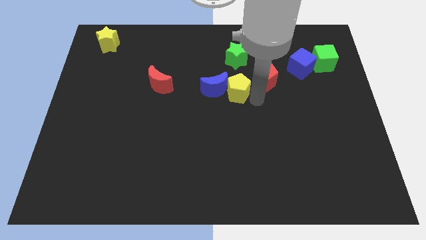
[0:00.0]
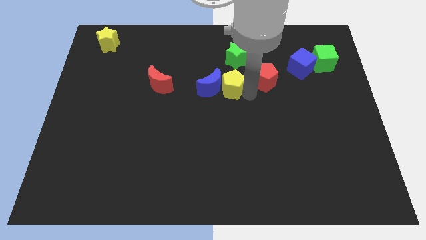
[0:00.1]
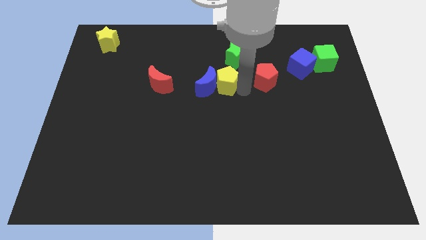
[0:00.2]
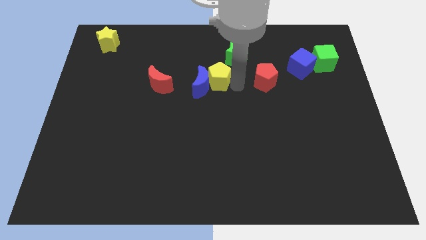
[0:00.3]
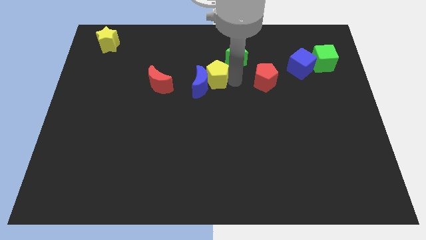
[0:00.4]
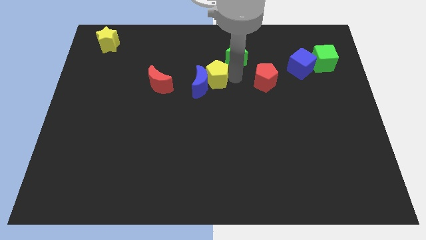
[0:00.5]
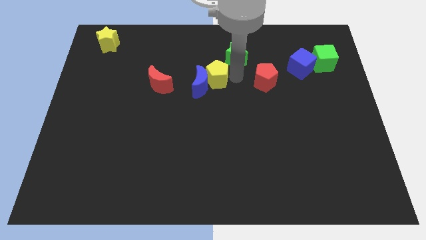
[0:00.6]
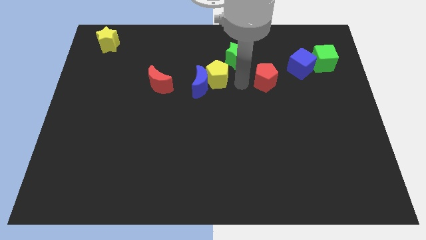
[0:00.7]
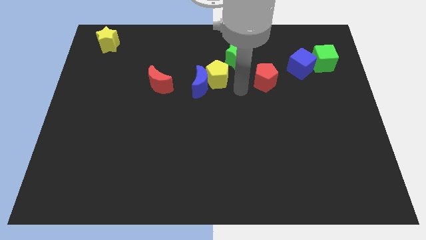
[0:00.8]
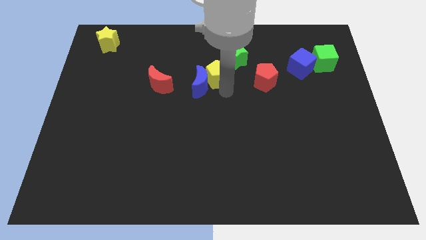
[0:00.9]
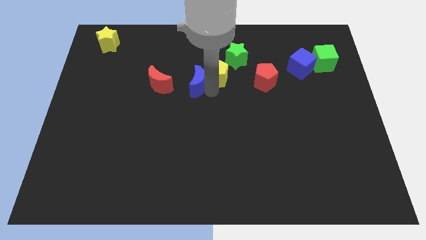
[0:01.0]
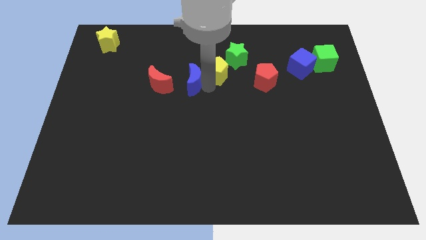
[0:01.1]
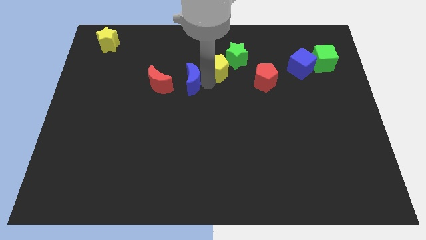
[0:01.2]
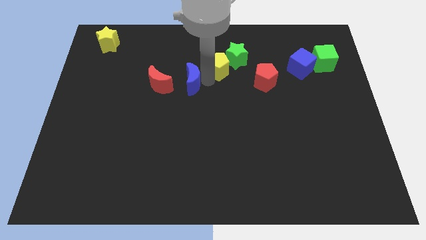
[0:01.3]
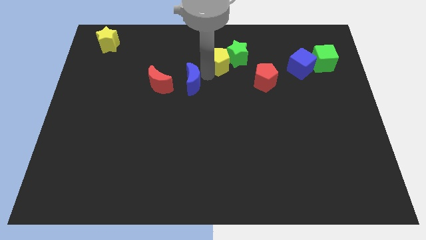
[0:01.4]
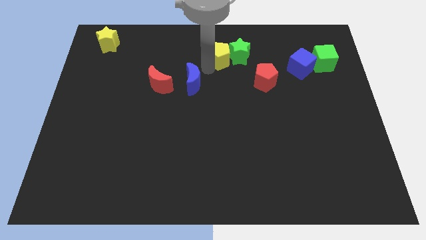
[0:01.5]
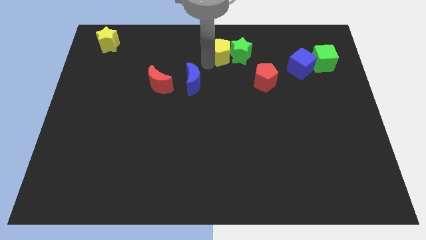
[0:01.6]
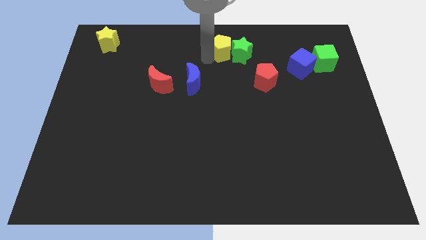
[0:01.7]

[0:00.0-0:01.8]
put the yellow pentagon on the left side of the green star

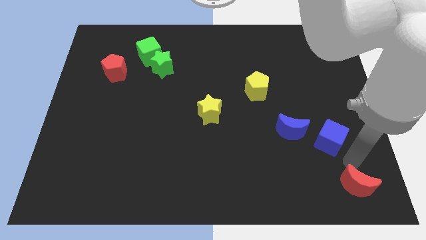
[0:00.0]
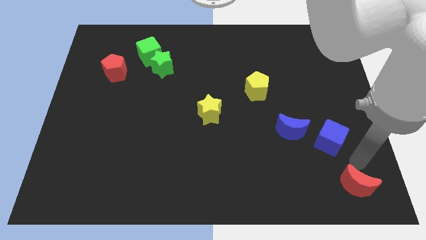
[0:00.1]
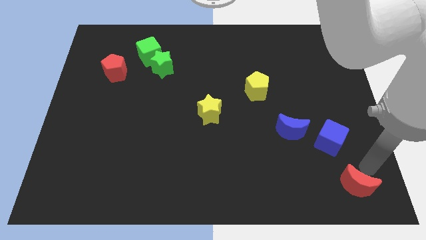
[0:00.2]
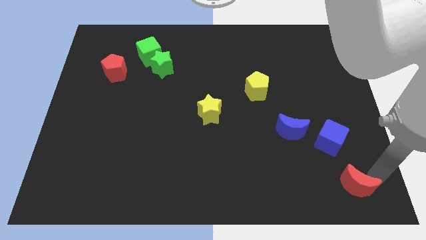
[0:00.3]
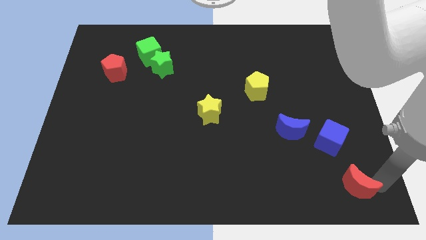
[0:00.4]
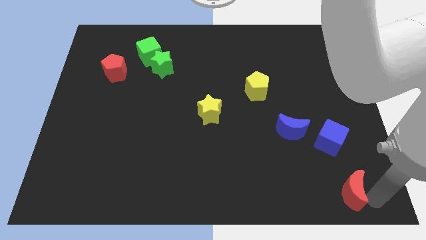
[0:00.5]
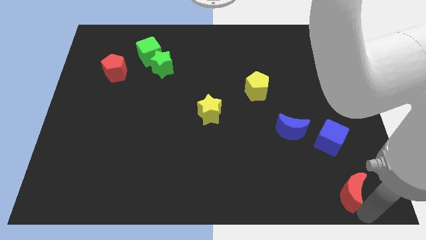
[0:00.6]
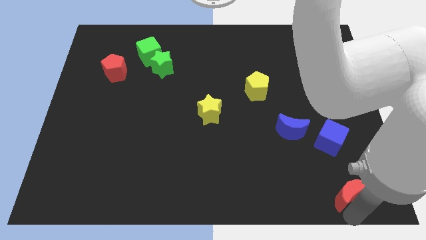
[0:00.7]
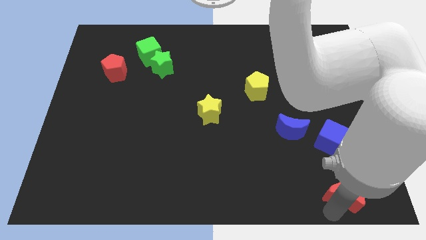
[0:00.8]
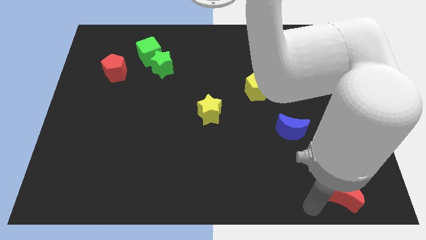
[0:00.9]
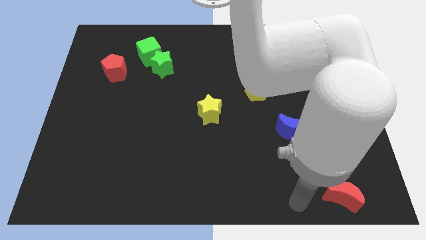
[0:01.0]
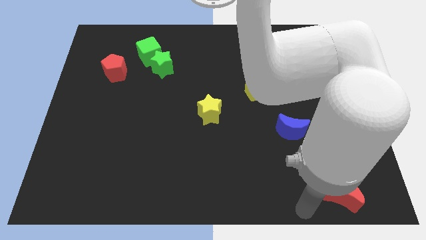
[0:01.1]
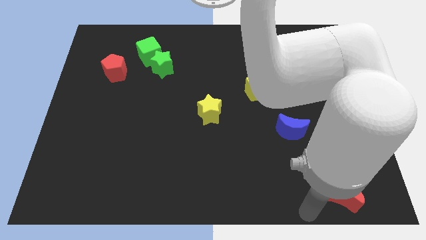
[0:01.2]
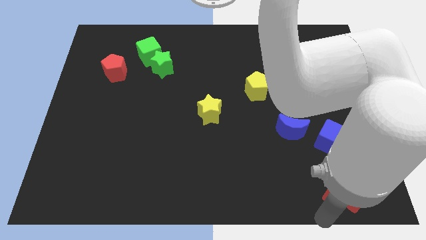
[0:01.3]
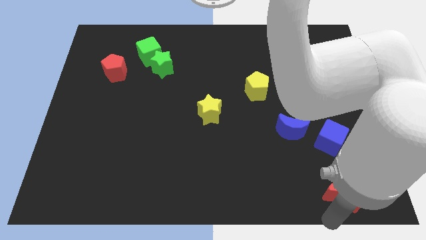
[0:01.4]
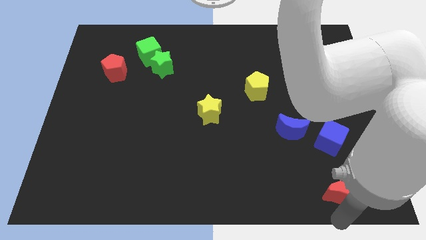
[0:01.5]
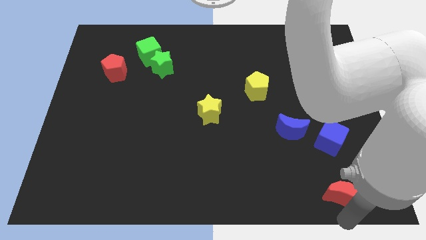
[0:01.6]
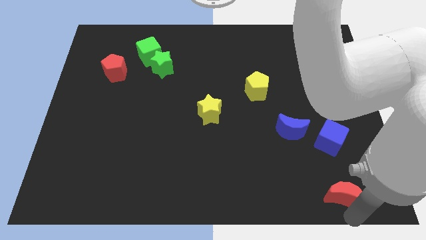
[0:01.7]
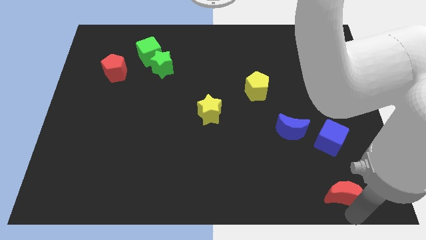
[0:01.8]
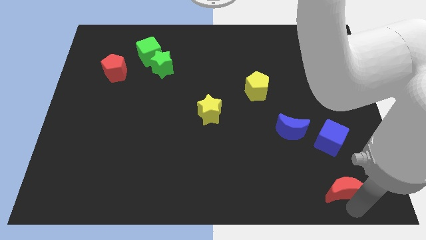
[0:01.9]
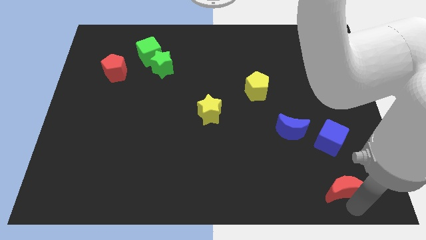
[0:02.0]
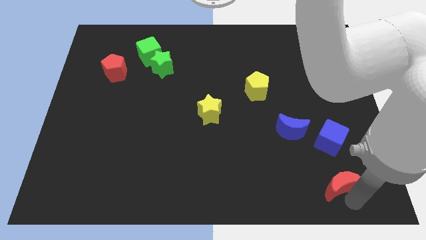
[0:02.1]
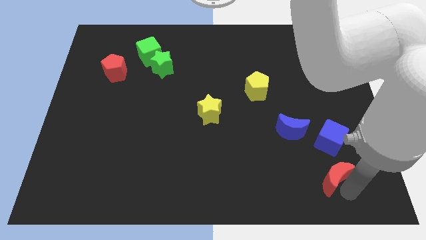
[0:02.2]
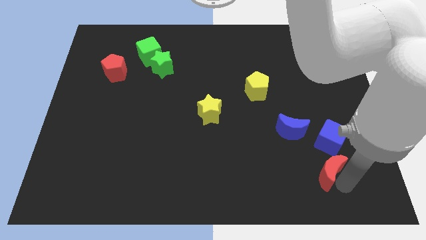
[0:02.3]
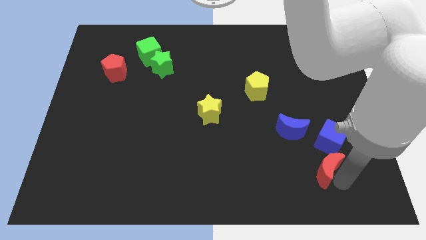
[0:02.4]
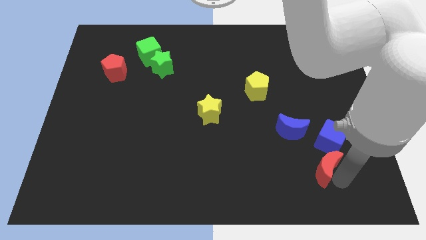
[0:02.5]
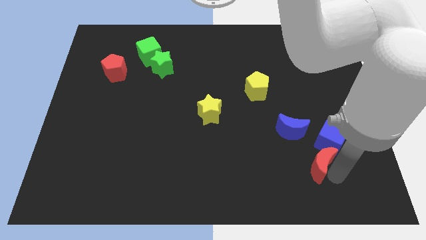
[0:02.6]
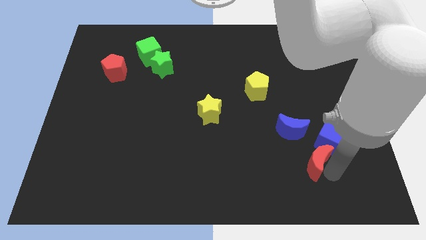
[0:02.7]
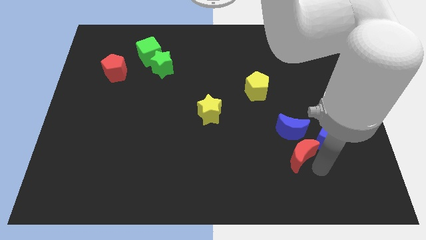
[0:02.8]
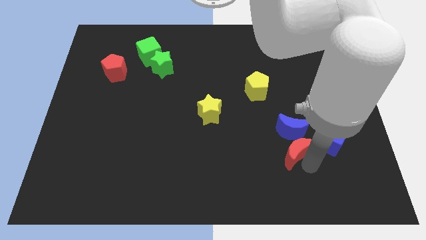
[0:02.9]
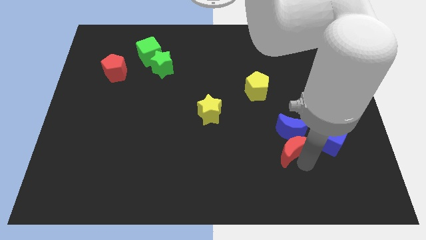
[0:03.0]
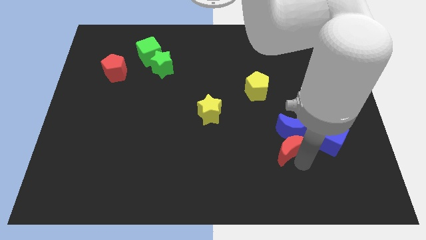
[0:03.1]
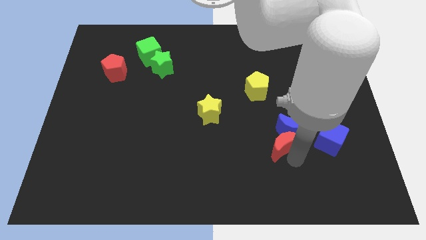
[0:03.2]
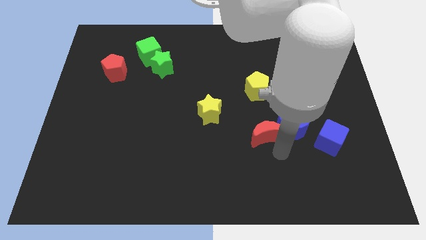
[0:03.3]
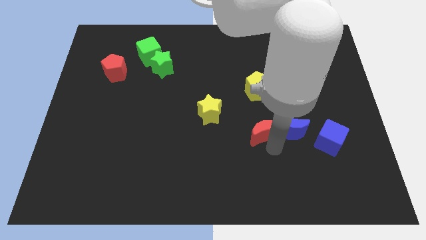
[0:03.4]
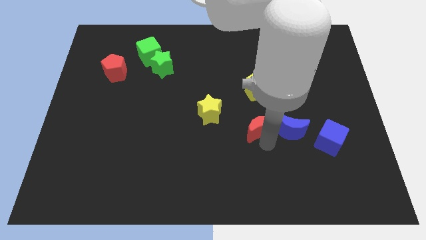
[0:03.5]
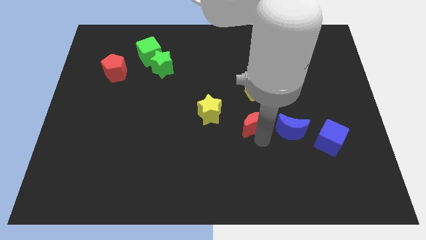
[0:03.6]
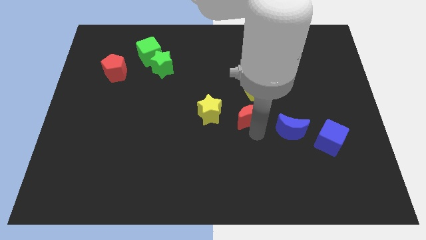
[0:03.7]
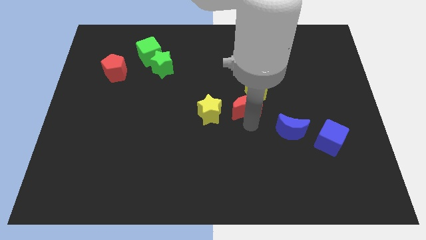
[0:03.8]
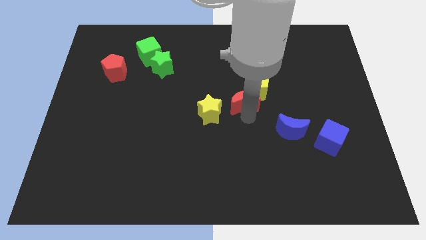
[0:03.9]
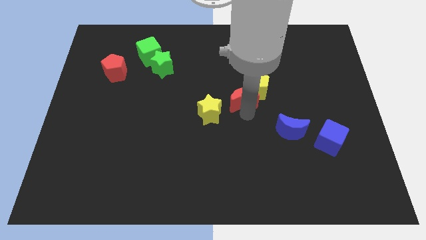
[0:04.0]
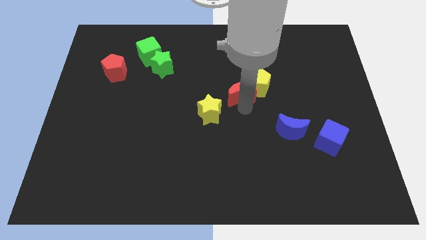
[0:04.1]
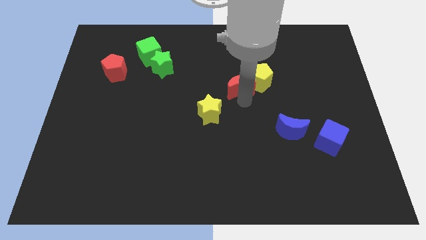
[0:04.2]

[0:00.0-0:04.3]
place the red moon in between yellow pentagon and yellow star

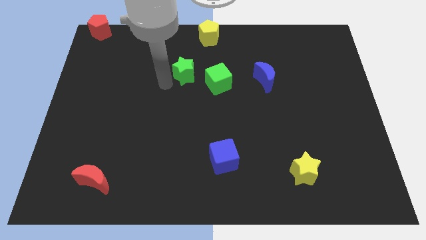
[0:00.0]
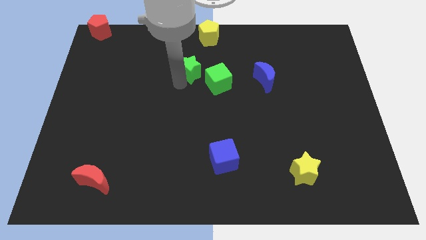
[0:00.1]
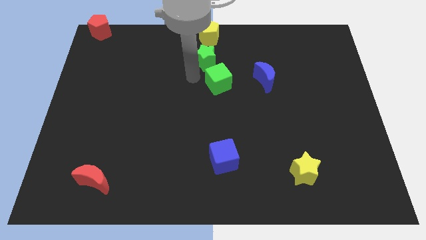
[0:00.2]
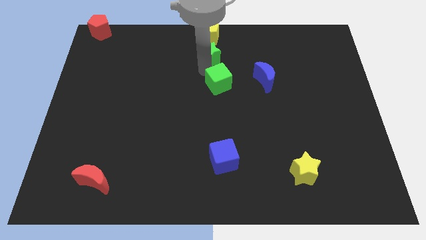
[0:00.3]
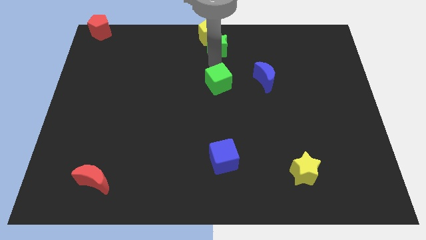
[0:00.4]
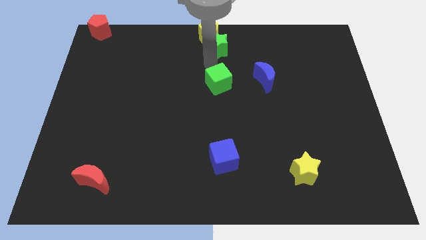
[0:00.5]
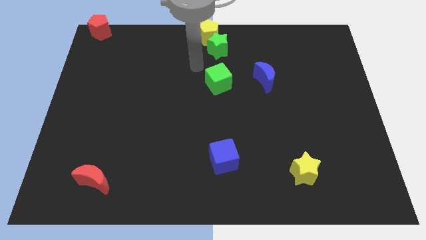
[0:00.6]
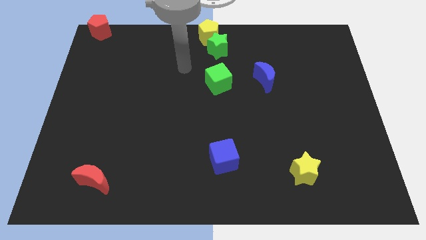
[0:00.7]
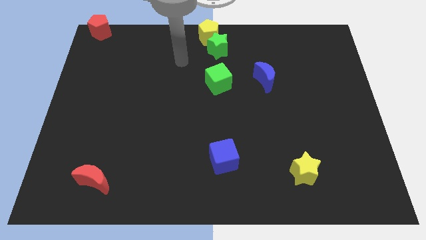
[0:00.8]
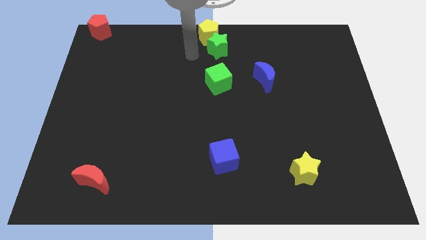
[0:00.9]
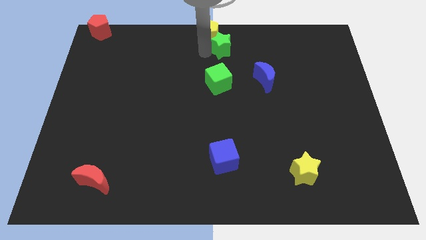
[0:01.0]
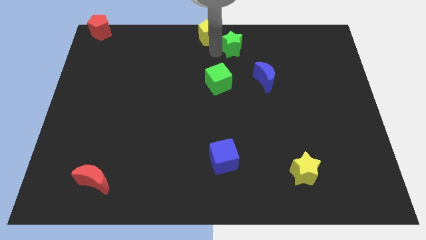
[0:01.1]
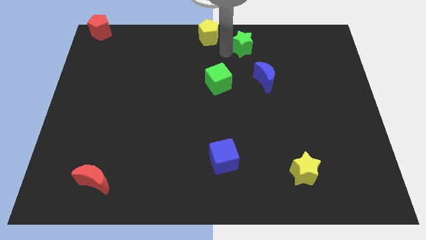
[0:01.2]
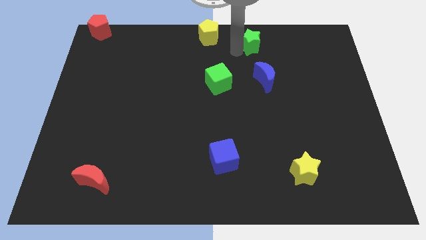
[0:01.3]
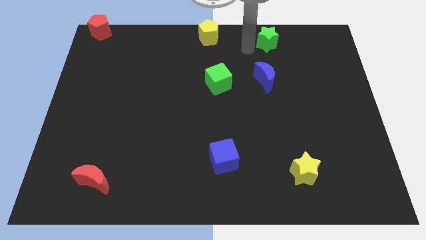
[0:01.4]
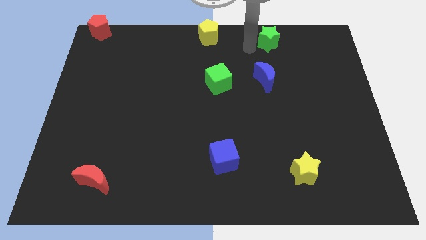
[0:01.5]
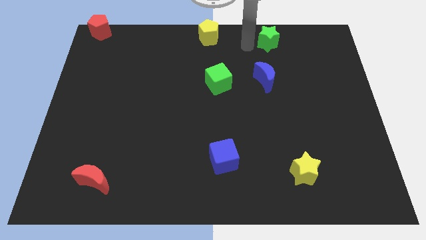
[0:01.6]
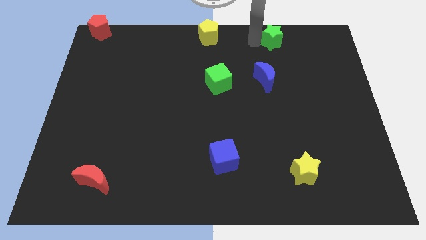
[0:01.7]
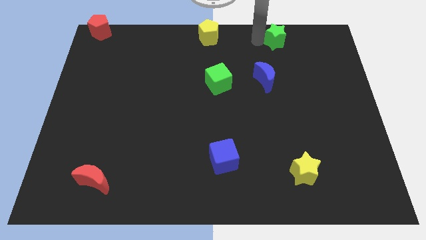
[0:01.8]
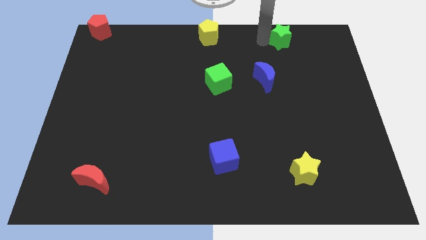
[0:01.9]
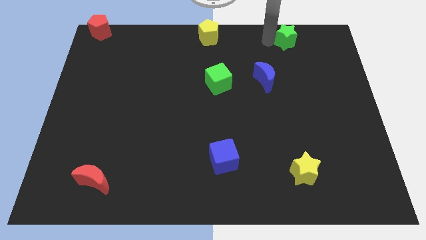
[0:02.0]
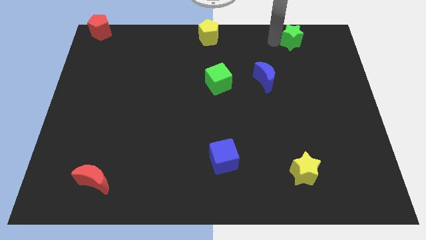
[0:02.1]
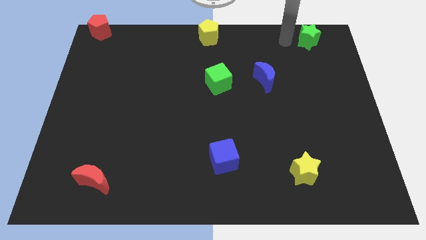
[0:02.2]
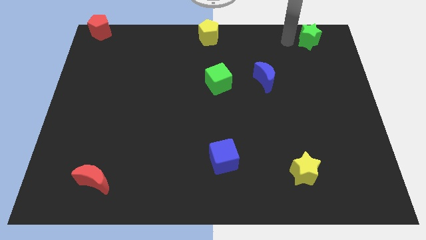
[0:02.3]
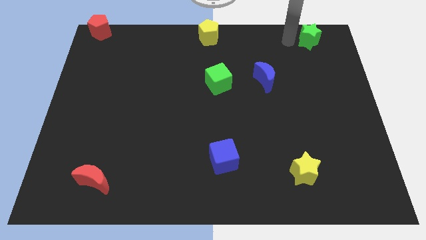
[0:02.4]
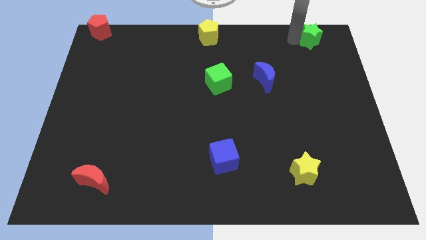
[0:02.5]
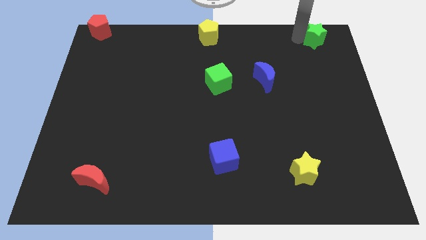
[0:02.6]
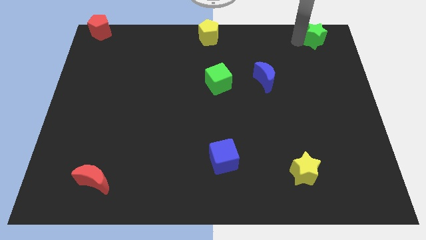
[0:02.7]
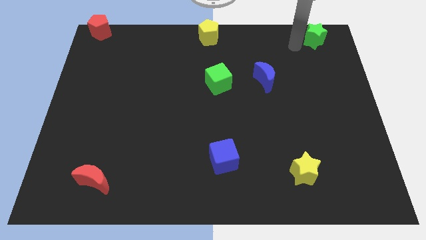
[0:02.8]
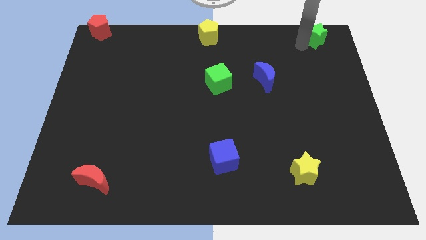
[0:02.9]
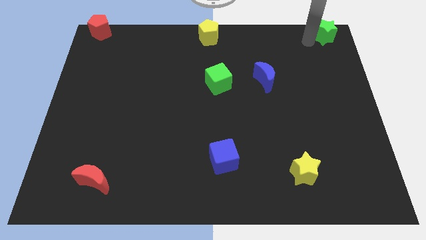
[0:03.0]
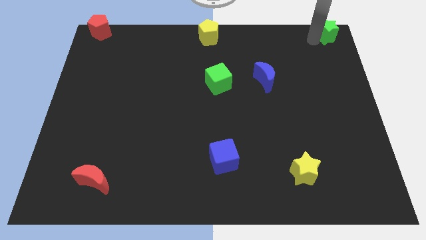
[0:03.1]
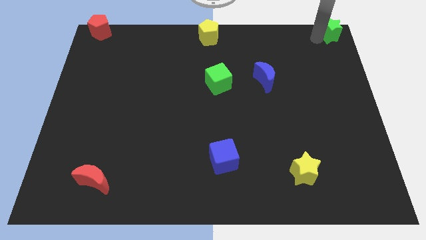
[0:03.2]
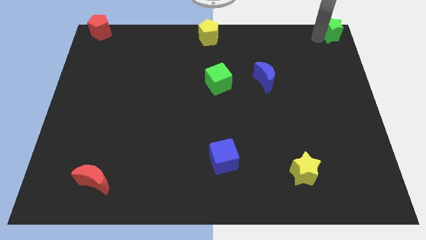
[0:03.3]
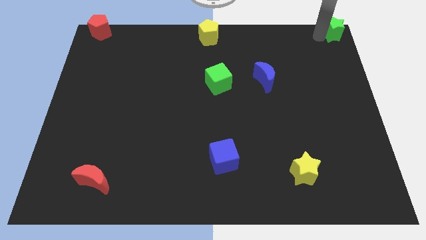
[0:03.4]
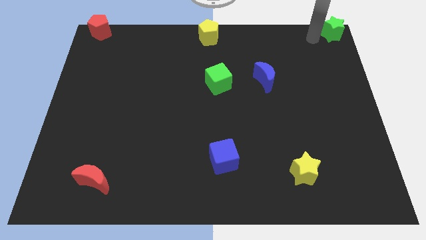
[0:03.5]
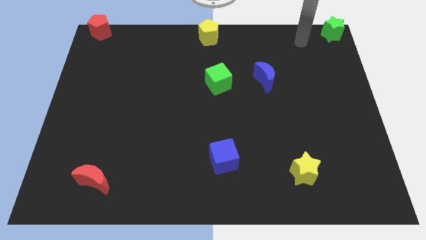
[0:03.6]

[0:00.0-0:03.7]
push the green star towards the top right corner of the board
